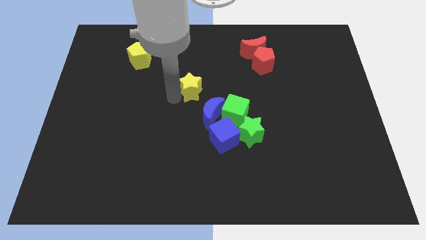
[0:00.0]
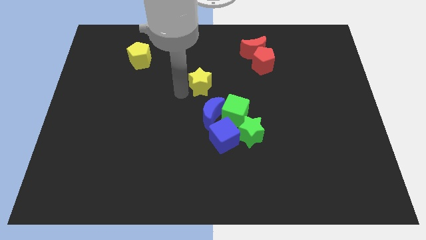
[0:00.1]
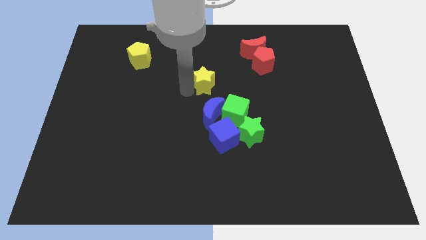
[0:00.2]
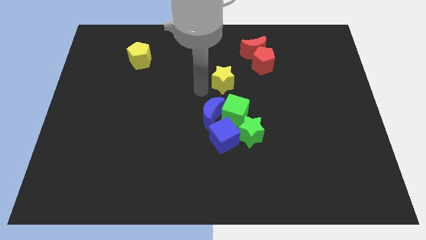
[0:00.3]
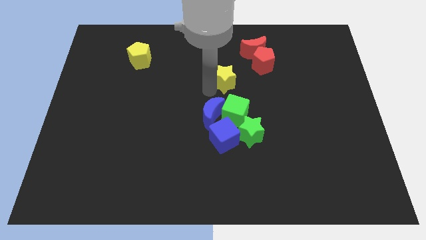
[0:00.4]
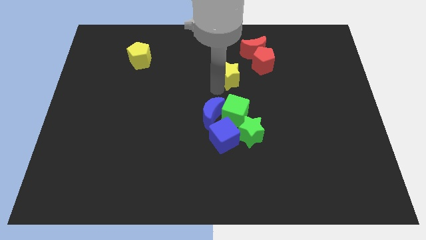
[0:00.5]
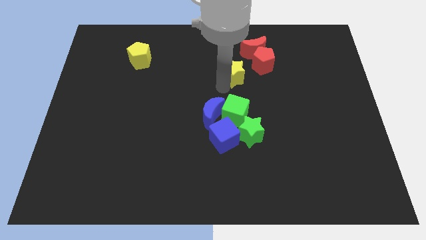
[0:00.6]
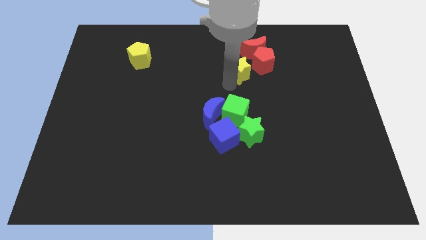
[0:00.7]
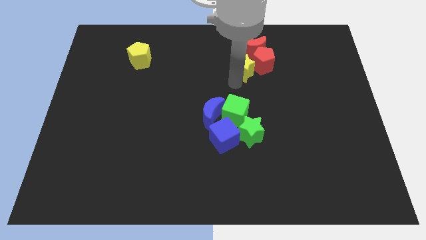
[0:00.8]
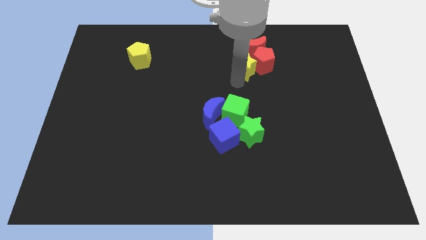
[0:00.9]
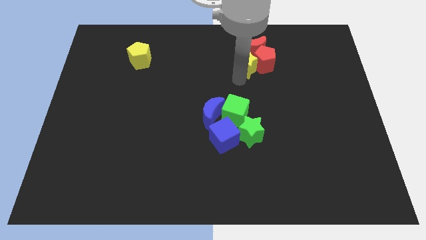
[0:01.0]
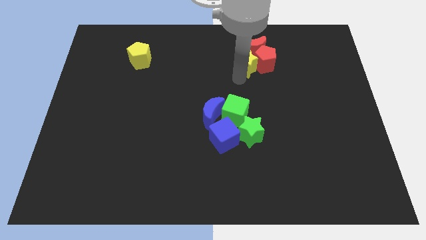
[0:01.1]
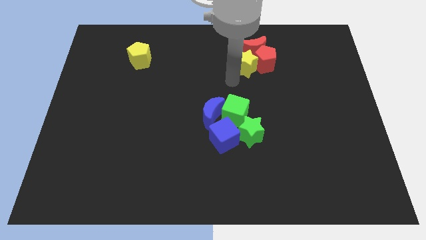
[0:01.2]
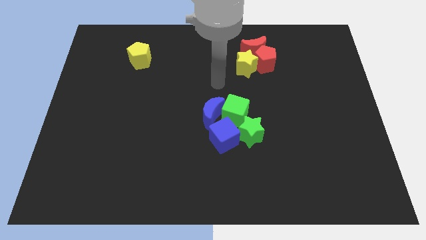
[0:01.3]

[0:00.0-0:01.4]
place the yellow star to the left side of the red pentagon

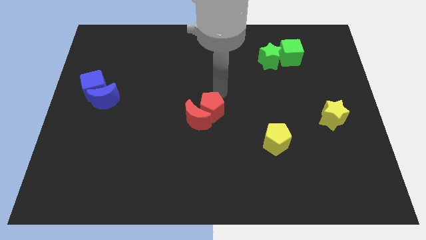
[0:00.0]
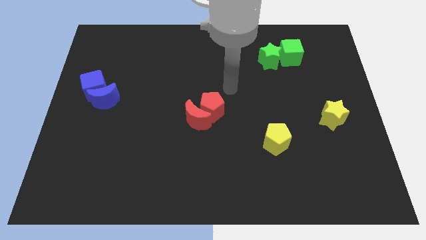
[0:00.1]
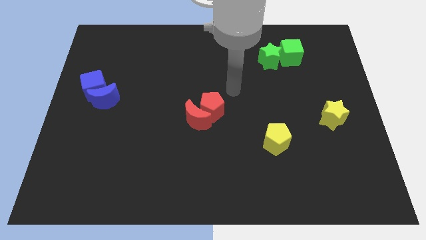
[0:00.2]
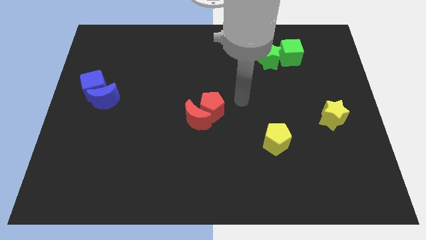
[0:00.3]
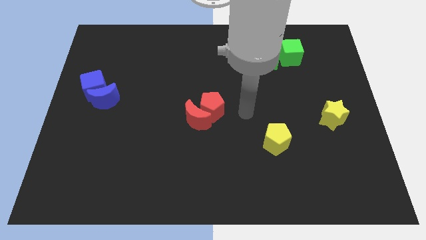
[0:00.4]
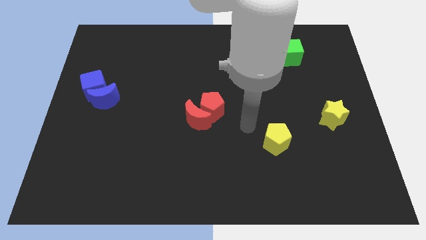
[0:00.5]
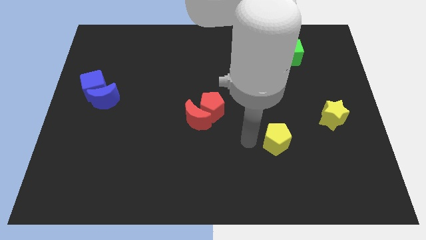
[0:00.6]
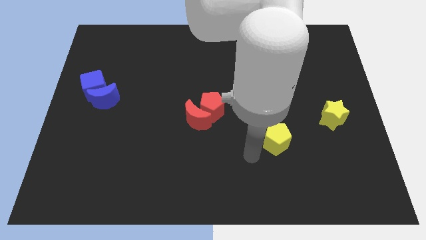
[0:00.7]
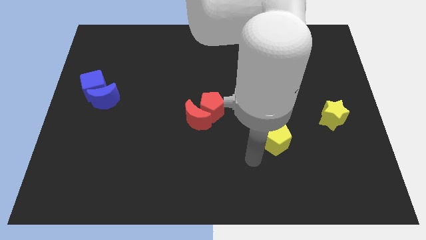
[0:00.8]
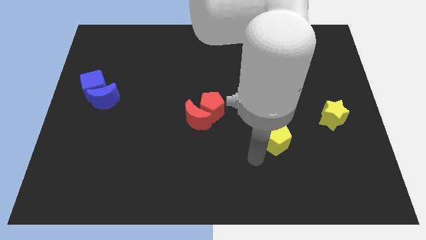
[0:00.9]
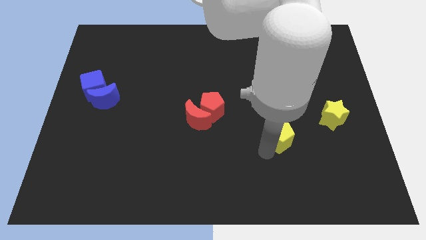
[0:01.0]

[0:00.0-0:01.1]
point the arm to the bottom left of the yellow pentagon

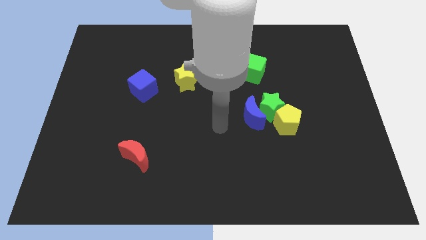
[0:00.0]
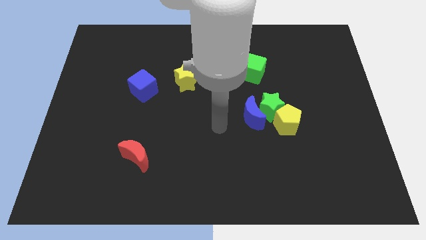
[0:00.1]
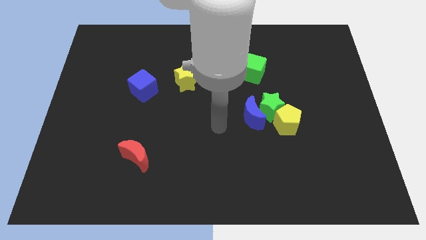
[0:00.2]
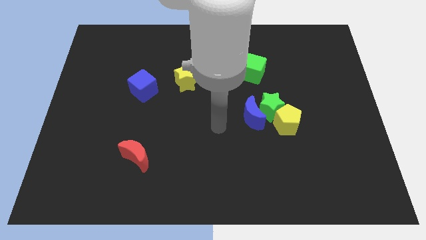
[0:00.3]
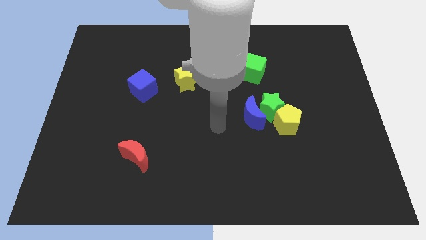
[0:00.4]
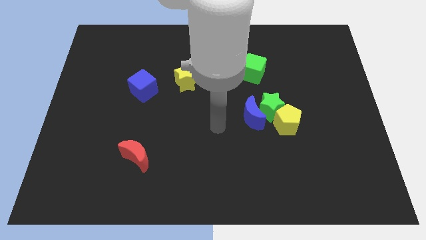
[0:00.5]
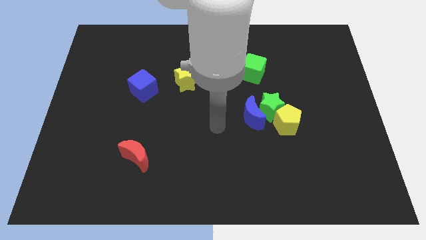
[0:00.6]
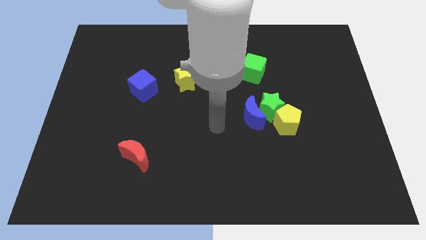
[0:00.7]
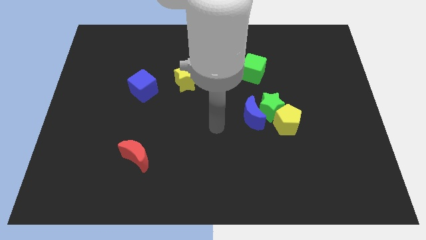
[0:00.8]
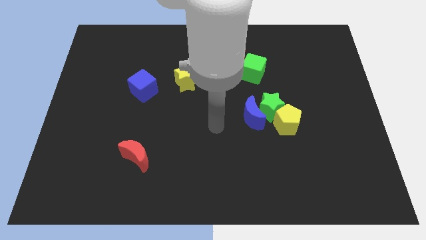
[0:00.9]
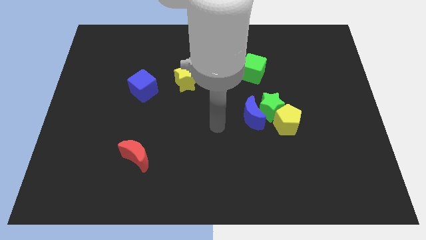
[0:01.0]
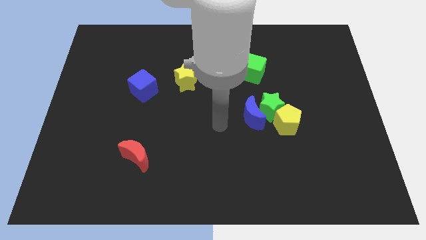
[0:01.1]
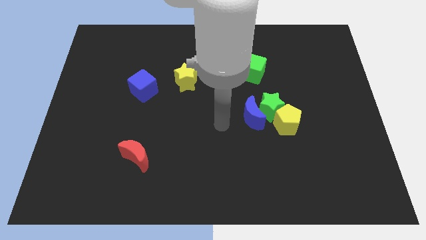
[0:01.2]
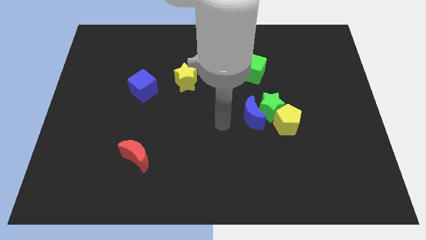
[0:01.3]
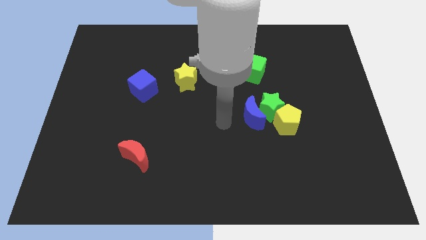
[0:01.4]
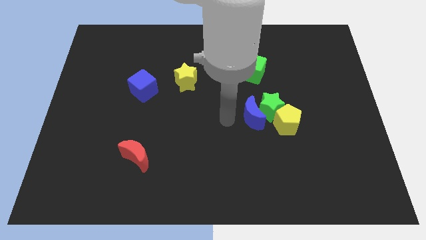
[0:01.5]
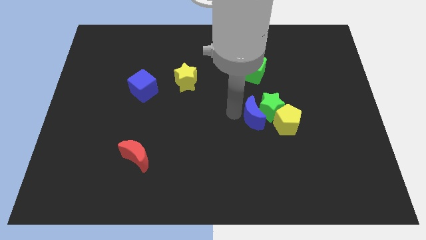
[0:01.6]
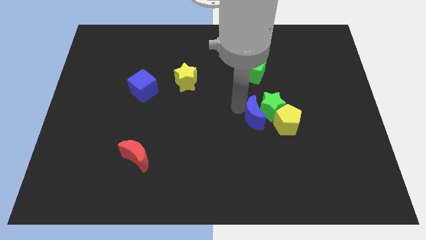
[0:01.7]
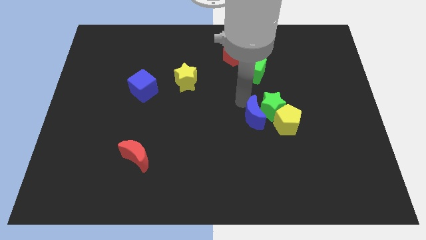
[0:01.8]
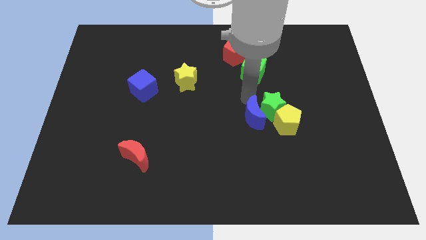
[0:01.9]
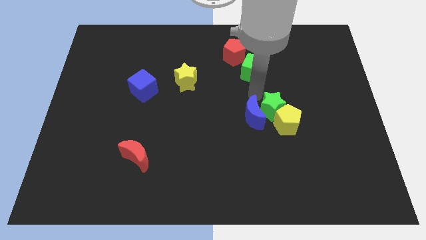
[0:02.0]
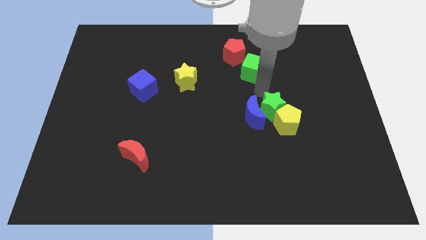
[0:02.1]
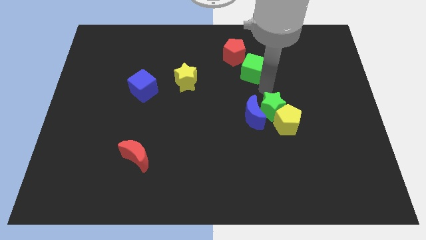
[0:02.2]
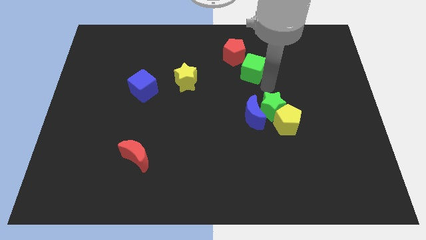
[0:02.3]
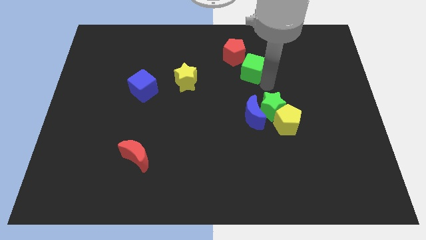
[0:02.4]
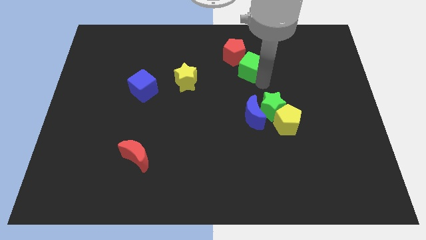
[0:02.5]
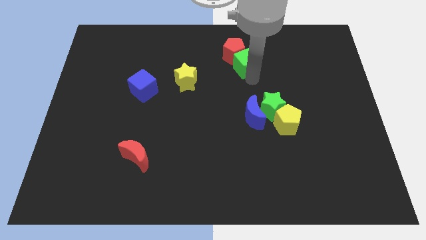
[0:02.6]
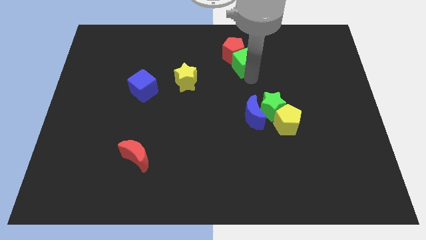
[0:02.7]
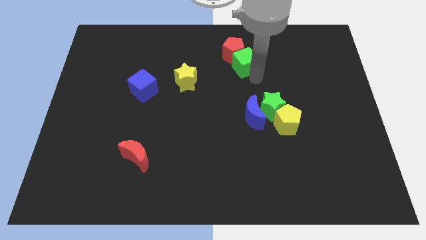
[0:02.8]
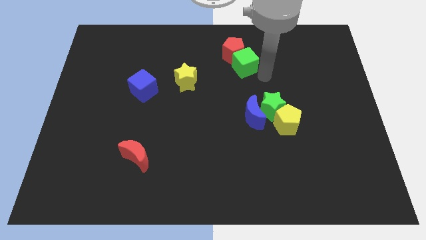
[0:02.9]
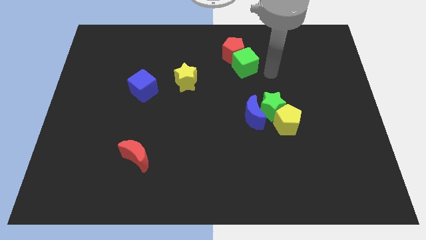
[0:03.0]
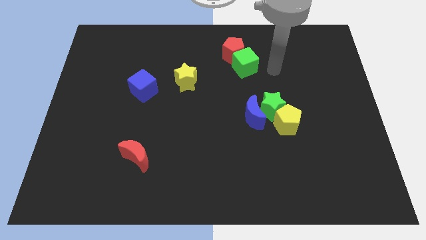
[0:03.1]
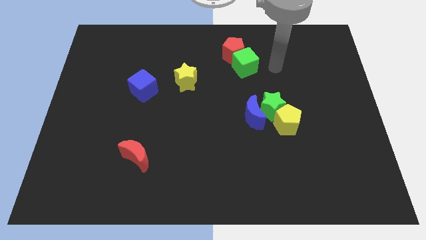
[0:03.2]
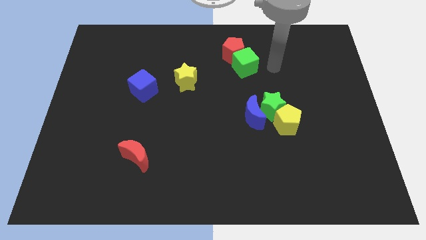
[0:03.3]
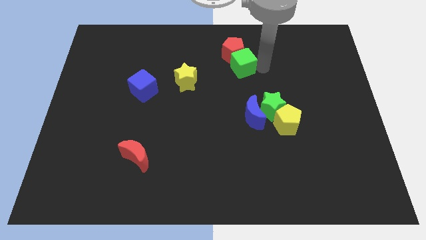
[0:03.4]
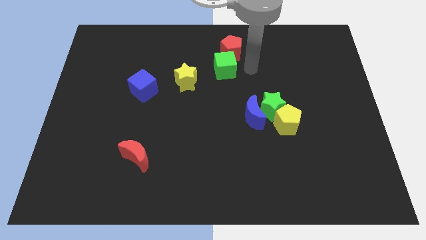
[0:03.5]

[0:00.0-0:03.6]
push the green cube into the red pentagon

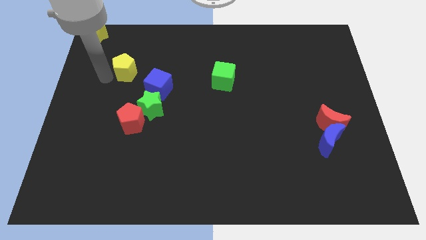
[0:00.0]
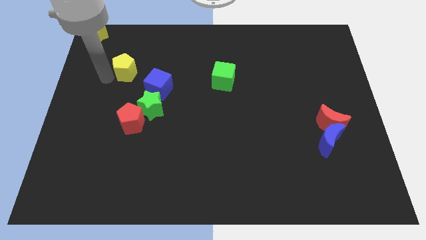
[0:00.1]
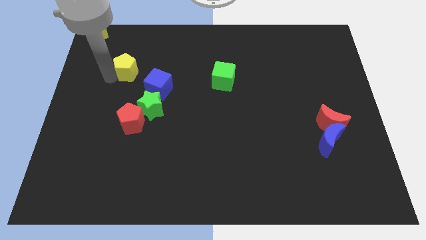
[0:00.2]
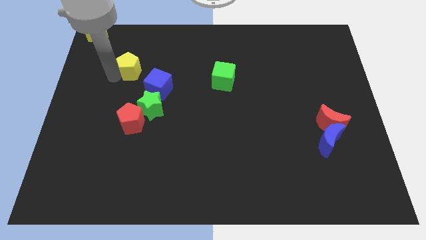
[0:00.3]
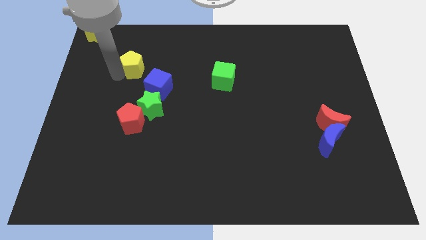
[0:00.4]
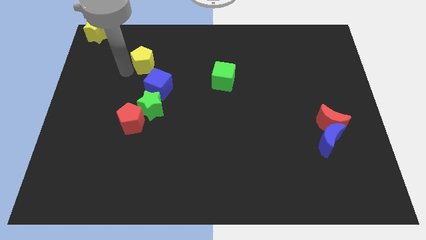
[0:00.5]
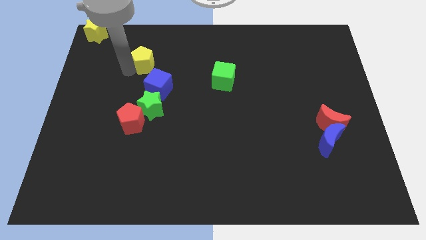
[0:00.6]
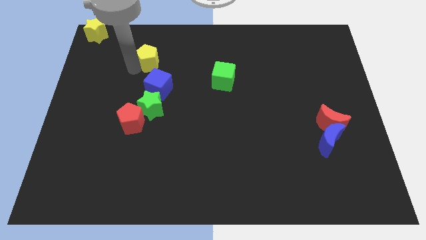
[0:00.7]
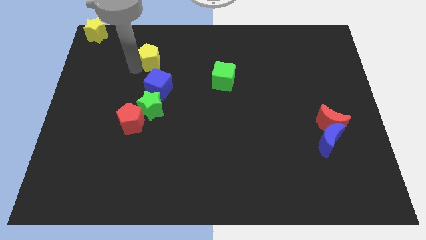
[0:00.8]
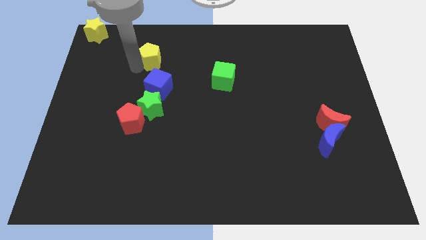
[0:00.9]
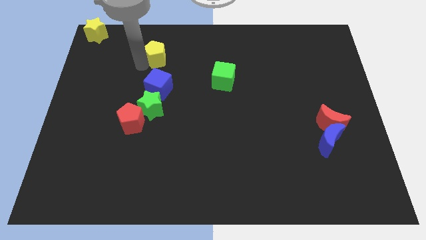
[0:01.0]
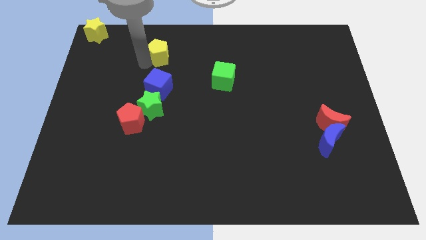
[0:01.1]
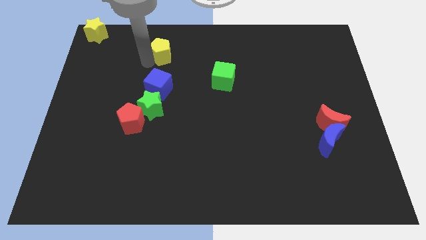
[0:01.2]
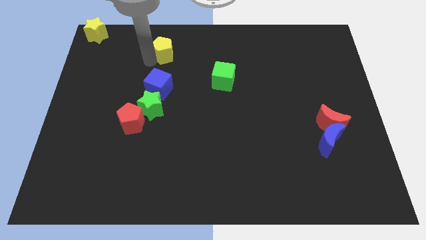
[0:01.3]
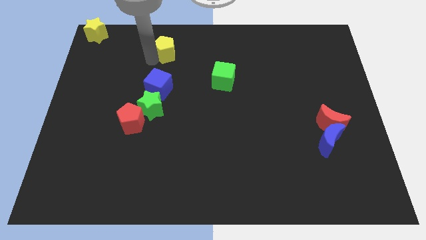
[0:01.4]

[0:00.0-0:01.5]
move yellow pentagon on top of blue cube

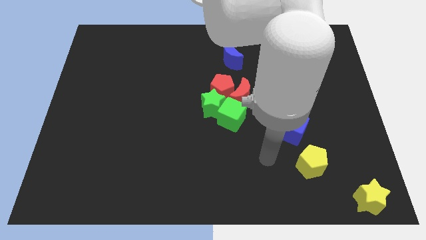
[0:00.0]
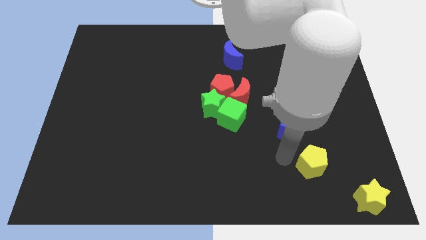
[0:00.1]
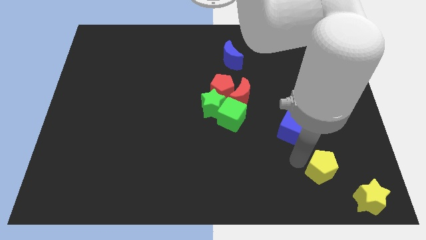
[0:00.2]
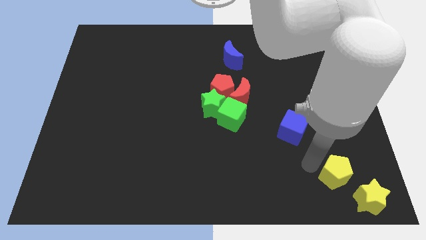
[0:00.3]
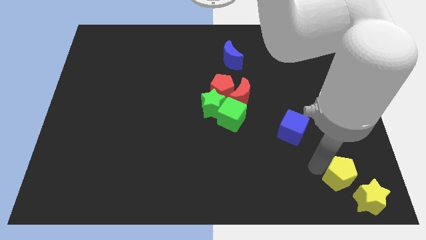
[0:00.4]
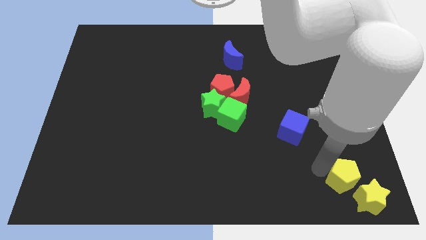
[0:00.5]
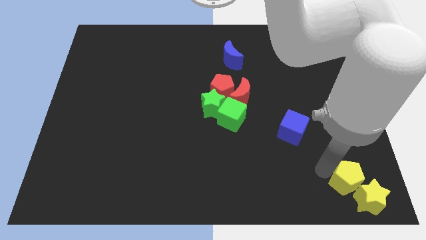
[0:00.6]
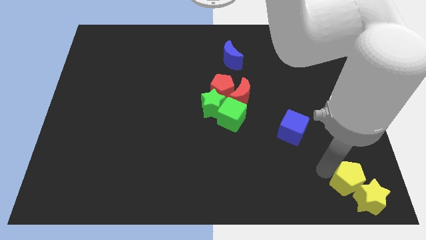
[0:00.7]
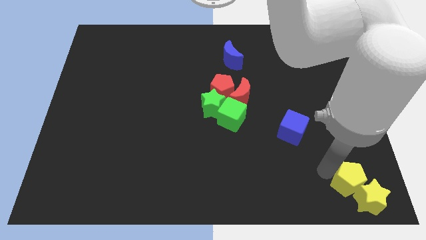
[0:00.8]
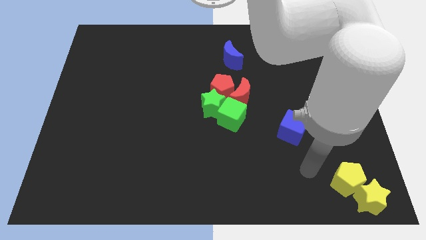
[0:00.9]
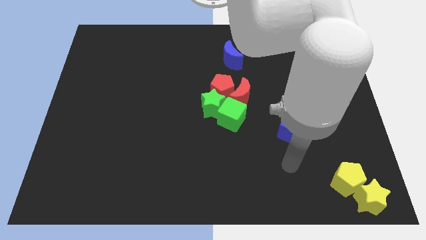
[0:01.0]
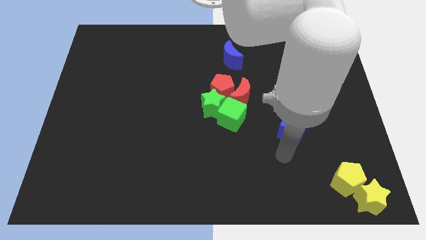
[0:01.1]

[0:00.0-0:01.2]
push the yellow pentagon in to the yellow star
